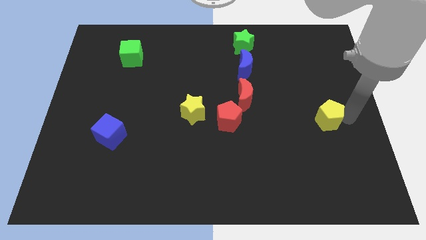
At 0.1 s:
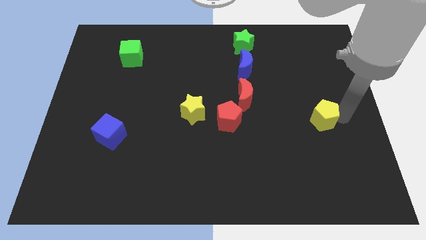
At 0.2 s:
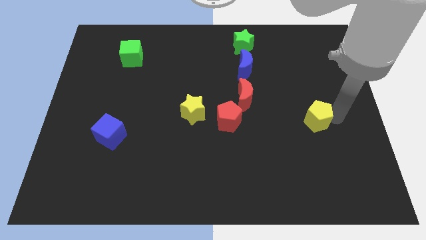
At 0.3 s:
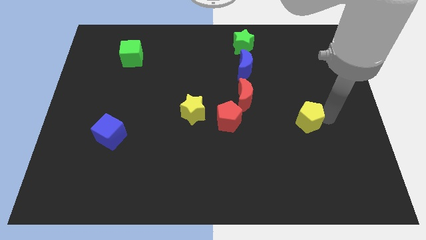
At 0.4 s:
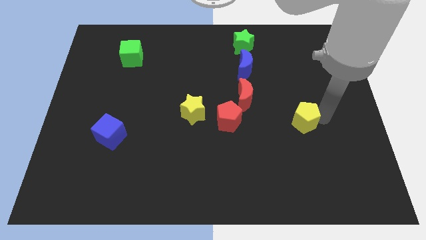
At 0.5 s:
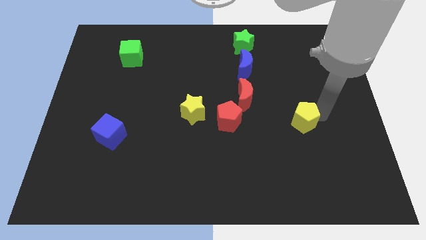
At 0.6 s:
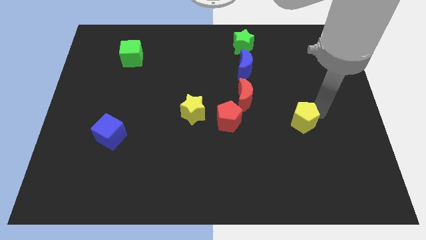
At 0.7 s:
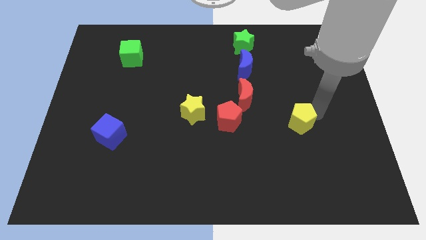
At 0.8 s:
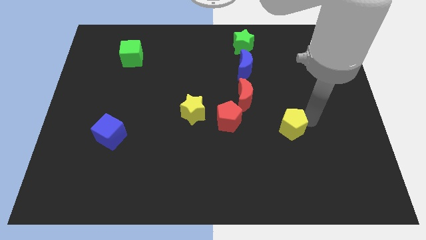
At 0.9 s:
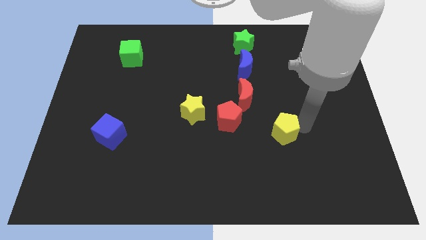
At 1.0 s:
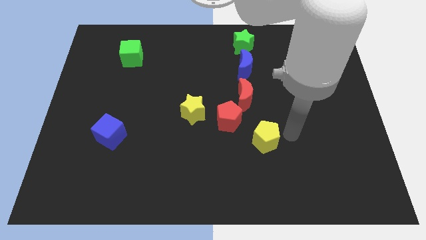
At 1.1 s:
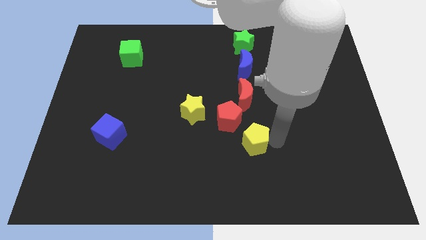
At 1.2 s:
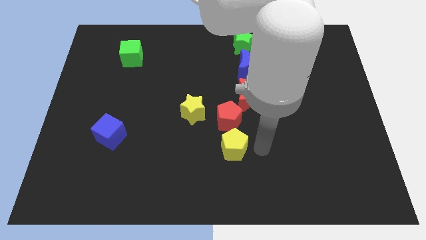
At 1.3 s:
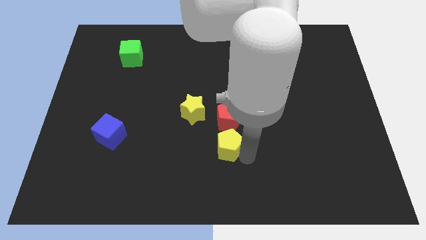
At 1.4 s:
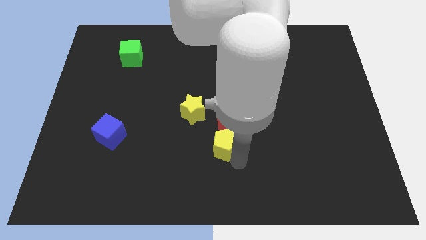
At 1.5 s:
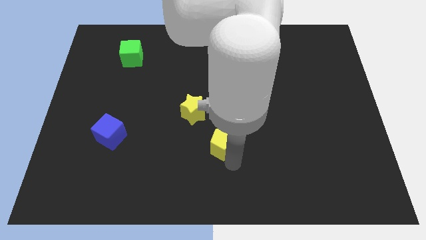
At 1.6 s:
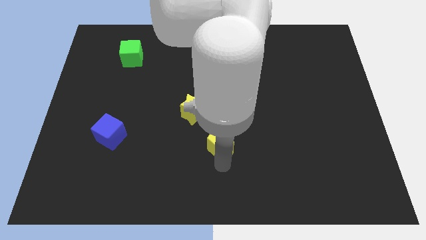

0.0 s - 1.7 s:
push the yellow pentagon to the left

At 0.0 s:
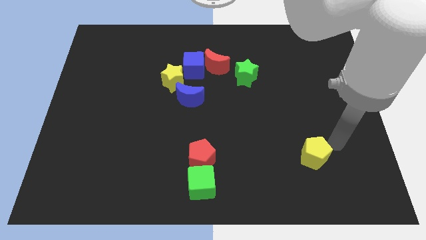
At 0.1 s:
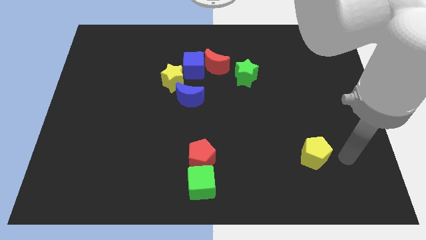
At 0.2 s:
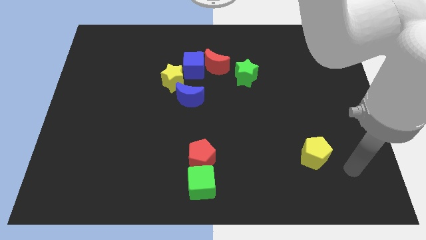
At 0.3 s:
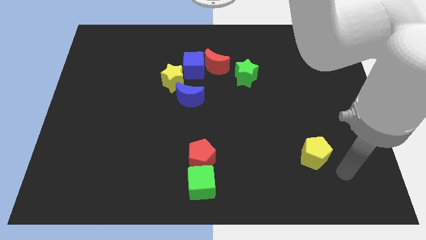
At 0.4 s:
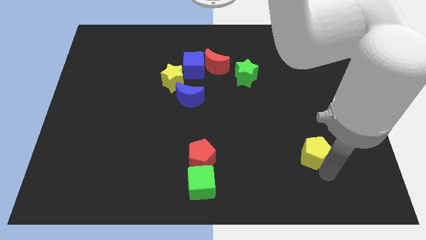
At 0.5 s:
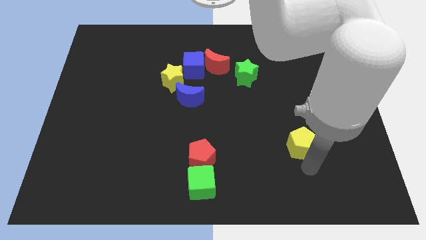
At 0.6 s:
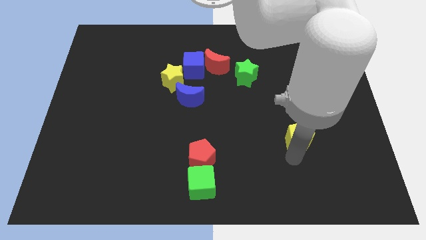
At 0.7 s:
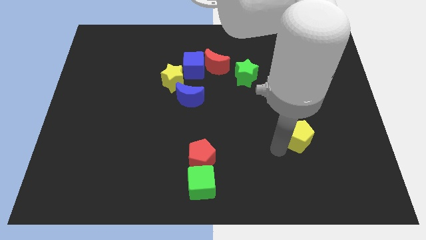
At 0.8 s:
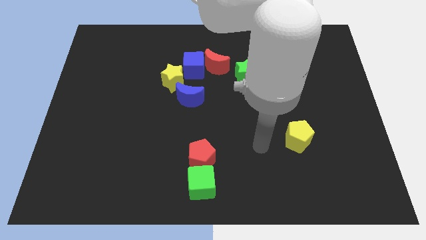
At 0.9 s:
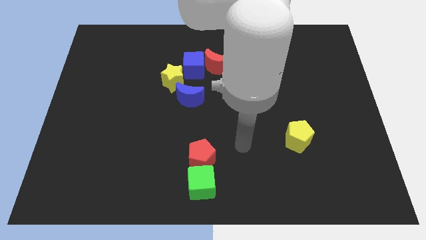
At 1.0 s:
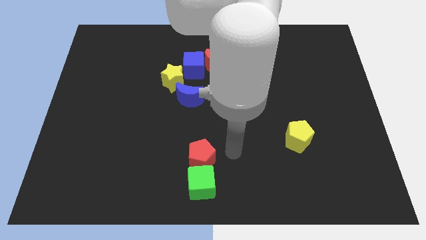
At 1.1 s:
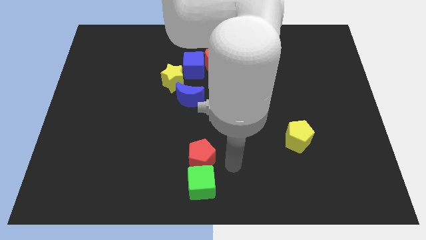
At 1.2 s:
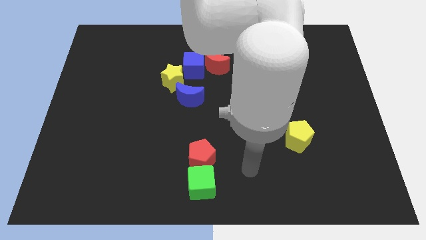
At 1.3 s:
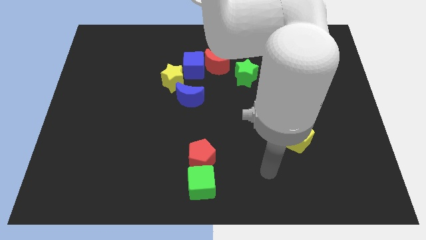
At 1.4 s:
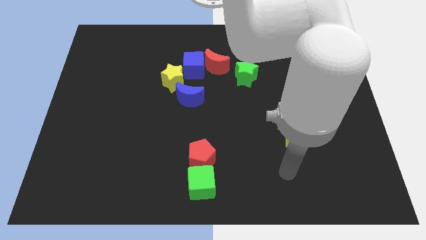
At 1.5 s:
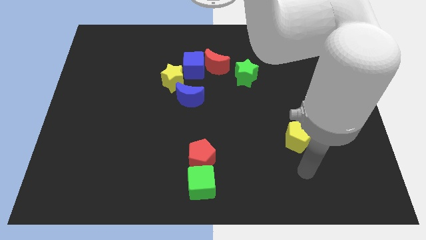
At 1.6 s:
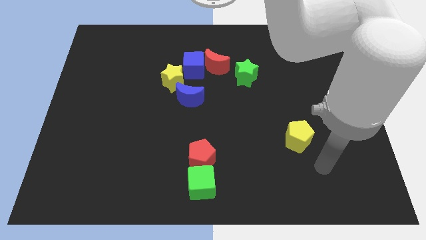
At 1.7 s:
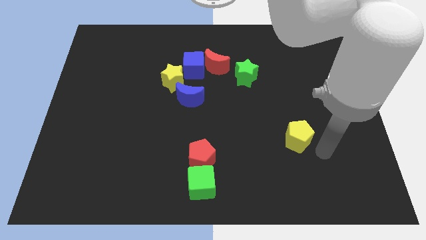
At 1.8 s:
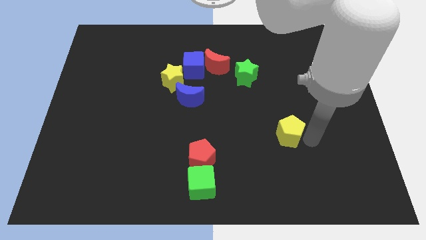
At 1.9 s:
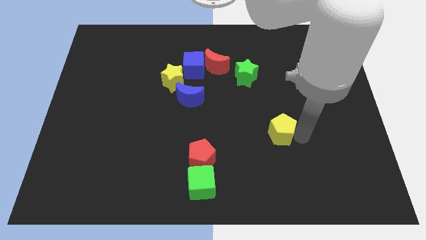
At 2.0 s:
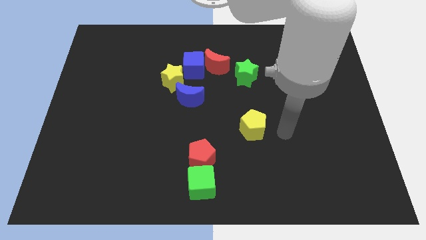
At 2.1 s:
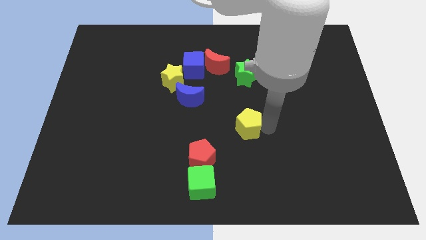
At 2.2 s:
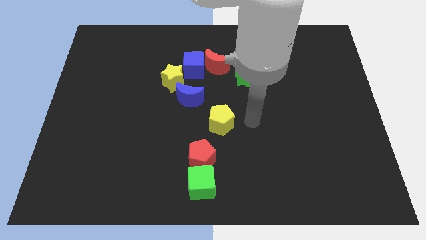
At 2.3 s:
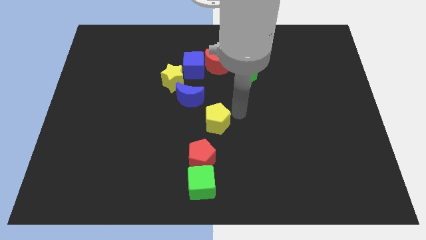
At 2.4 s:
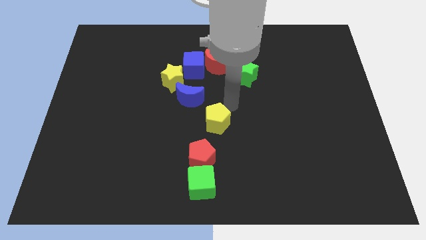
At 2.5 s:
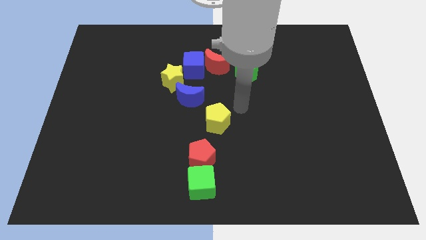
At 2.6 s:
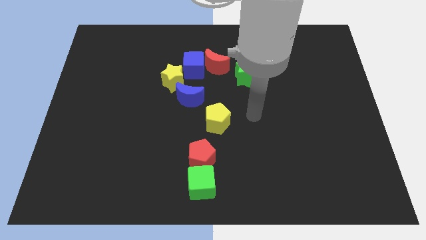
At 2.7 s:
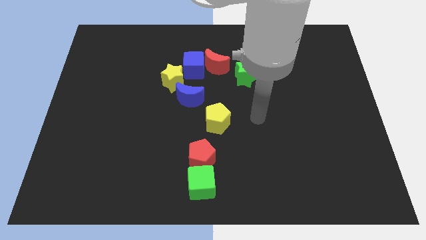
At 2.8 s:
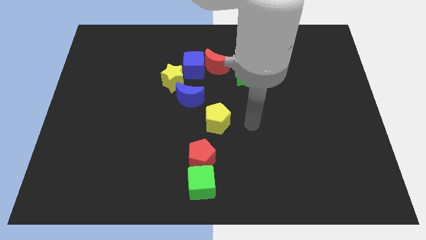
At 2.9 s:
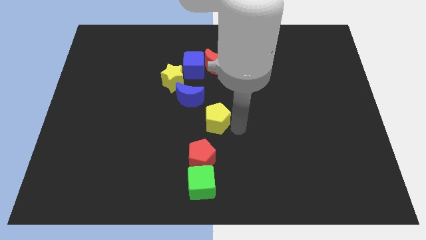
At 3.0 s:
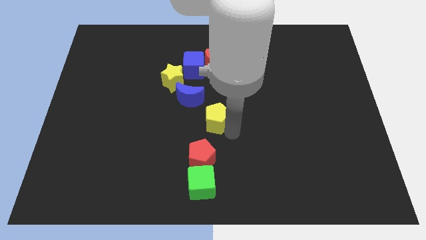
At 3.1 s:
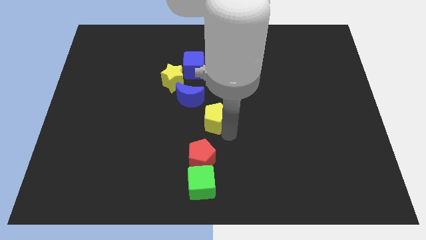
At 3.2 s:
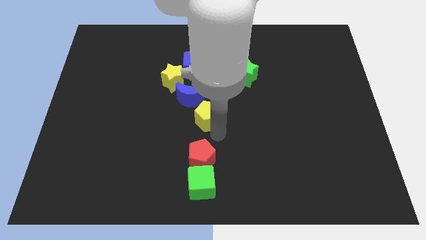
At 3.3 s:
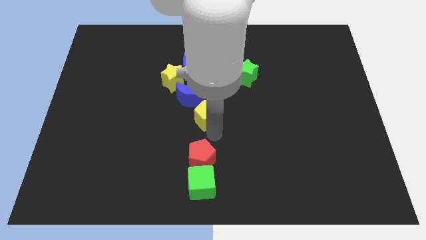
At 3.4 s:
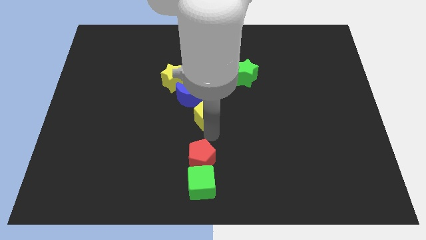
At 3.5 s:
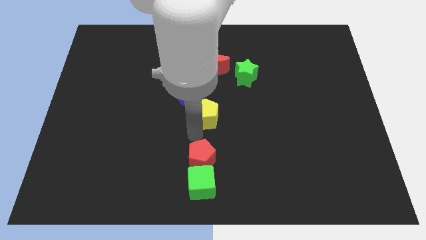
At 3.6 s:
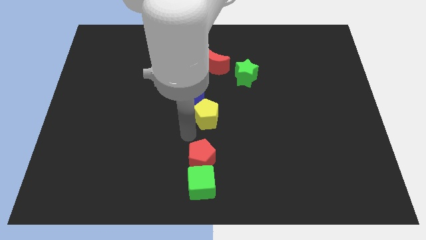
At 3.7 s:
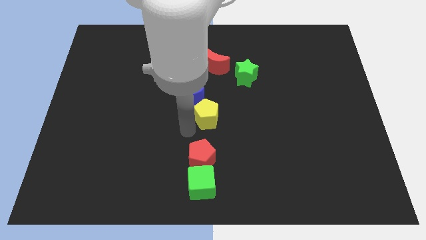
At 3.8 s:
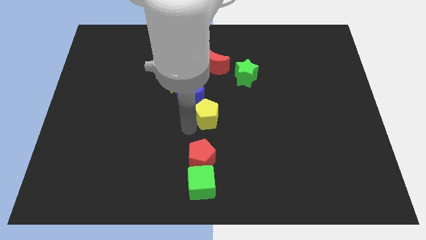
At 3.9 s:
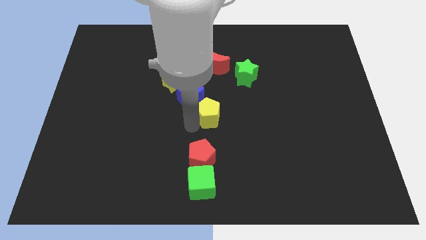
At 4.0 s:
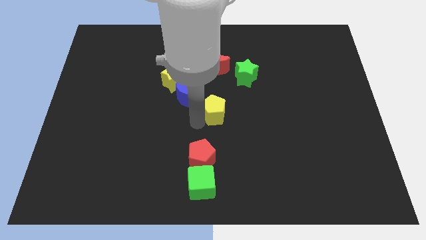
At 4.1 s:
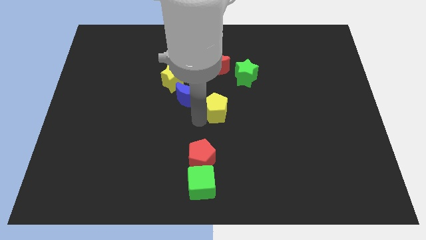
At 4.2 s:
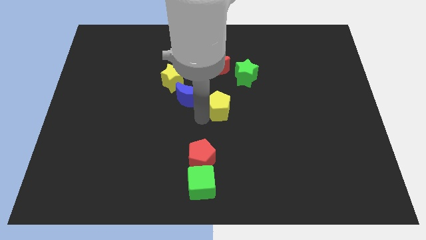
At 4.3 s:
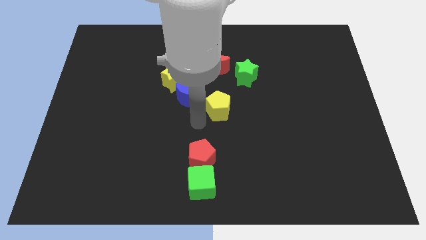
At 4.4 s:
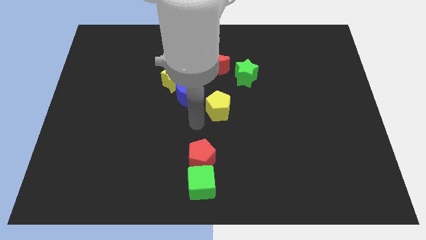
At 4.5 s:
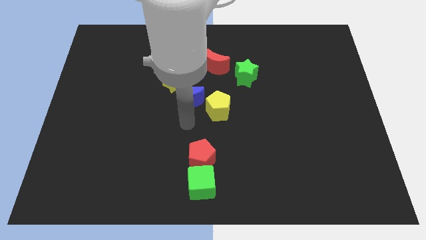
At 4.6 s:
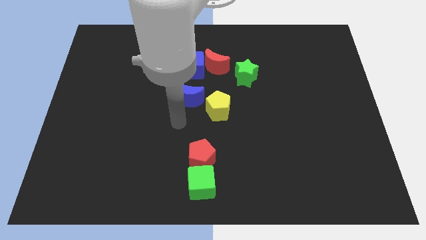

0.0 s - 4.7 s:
move the yellow pentagon besides the blue cube

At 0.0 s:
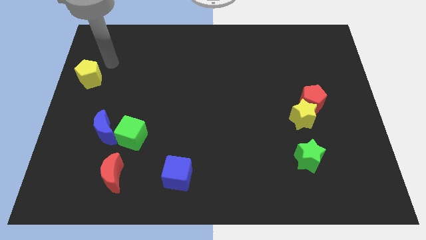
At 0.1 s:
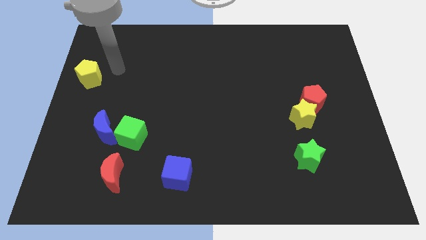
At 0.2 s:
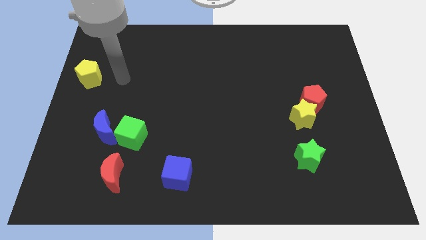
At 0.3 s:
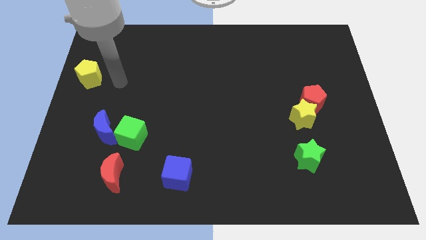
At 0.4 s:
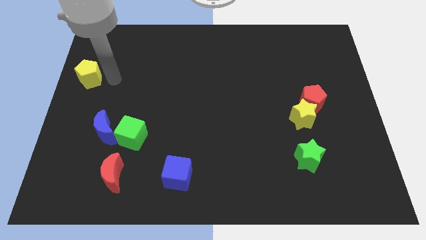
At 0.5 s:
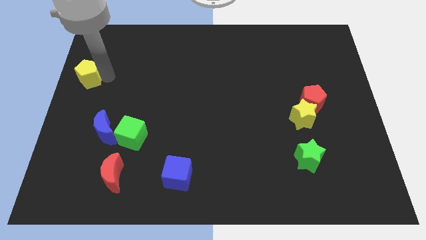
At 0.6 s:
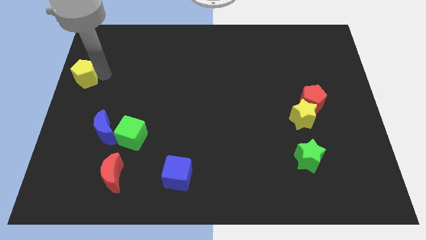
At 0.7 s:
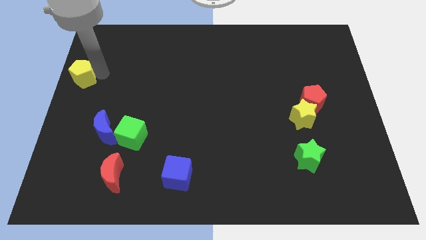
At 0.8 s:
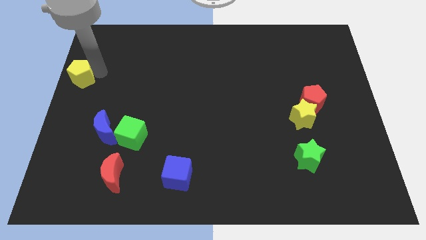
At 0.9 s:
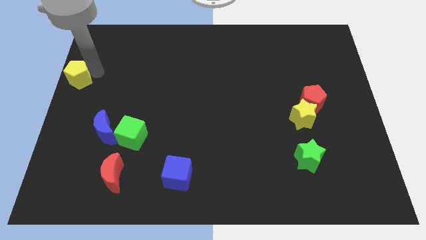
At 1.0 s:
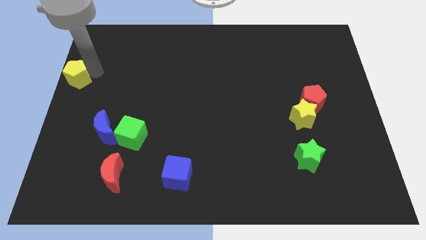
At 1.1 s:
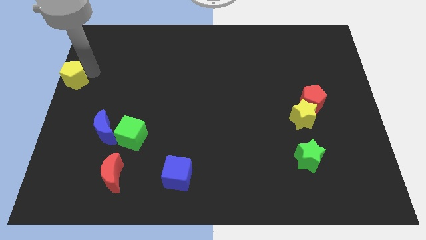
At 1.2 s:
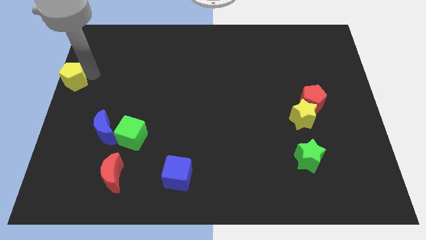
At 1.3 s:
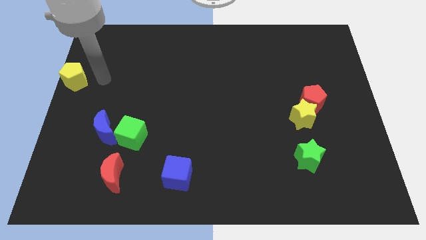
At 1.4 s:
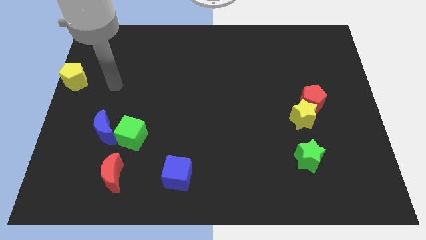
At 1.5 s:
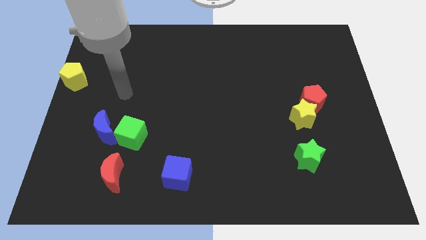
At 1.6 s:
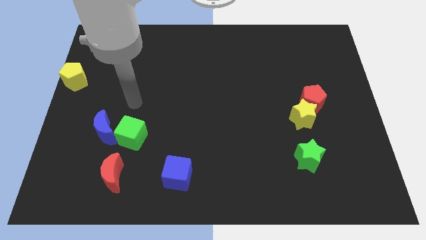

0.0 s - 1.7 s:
slide the yellow pentagon slightly to the left

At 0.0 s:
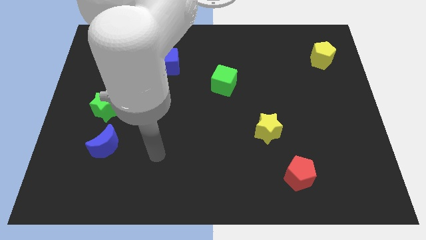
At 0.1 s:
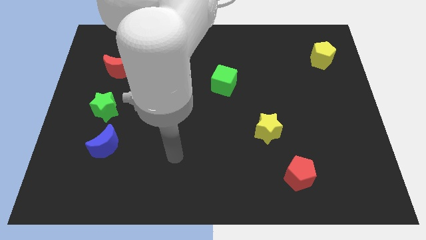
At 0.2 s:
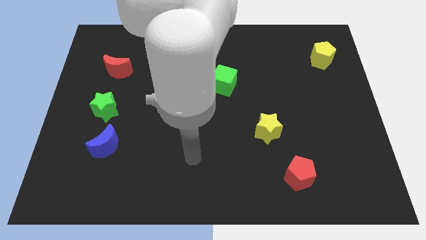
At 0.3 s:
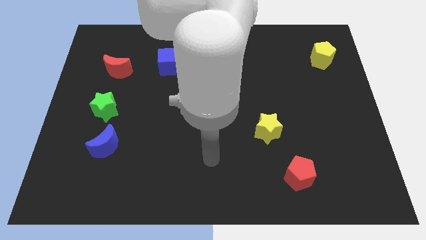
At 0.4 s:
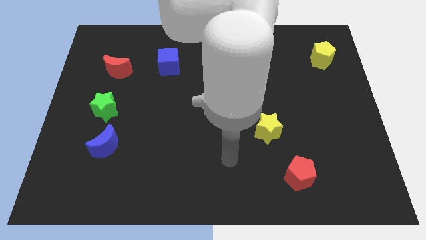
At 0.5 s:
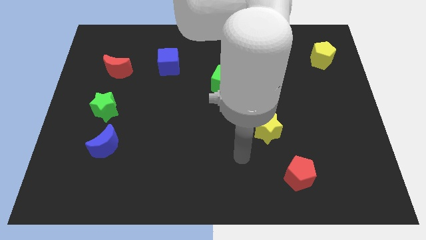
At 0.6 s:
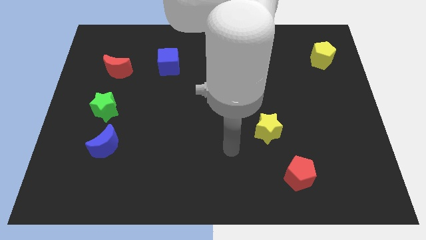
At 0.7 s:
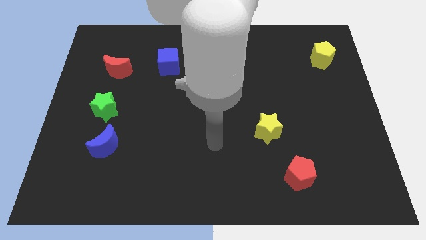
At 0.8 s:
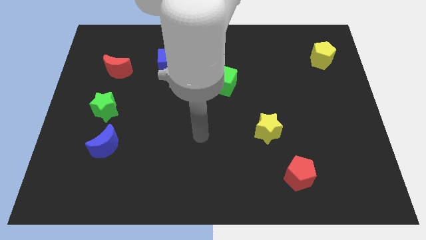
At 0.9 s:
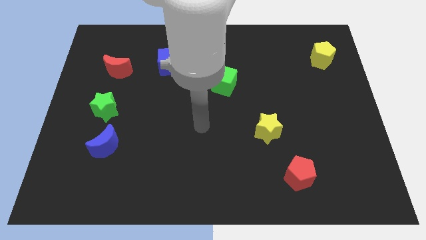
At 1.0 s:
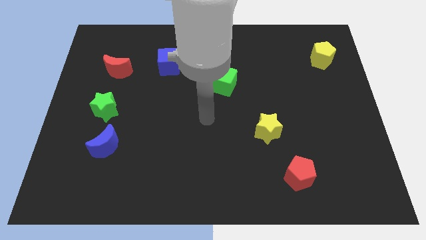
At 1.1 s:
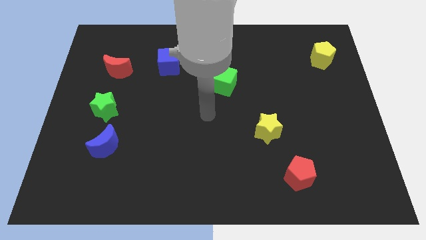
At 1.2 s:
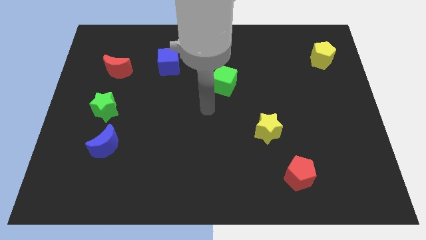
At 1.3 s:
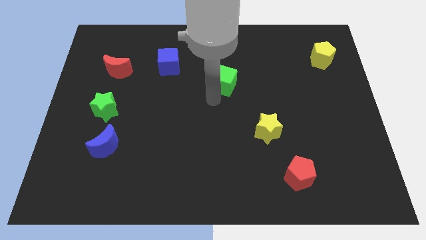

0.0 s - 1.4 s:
place arm close to the green cube
